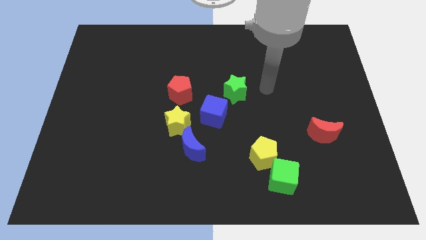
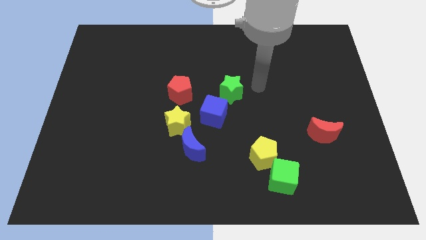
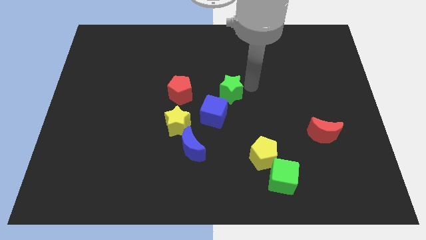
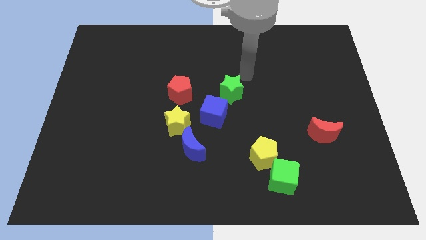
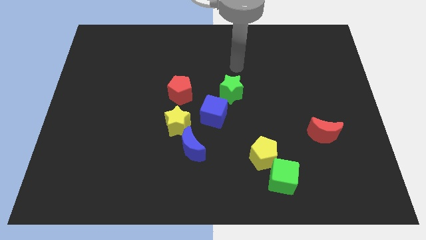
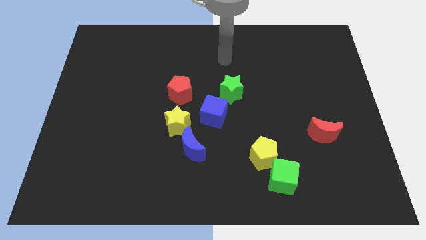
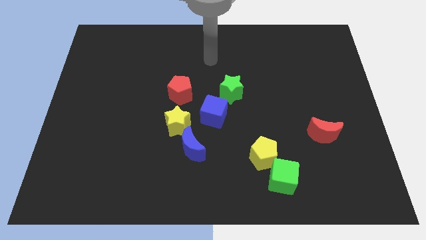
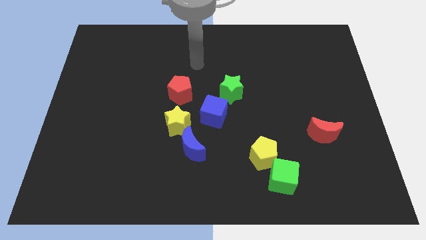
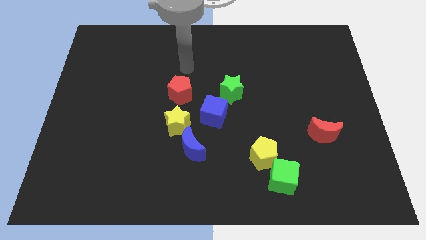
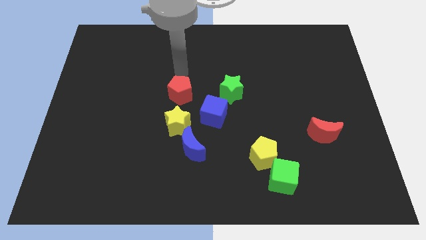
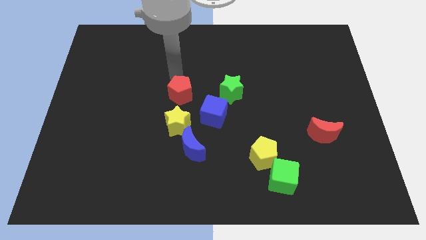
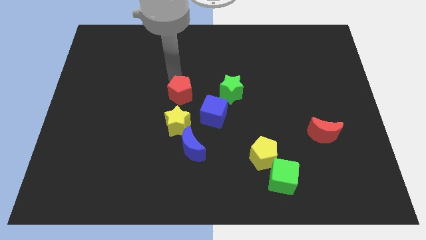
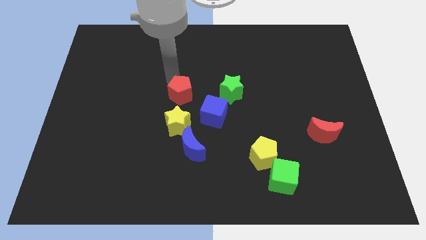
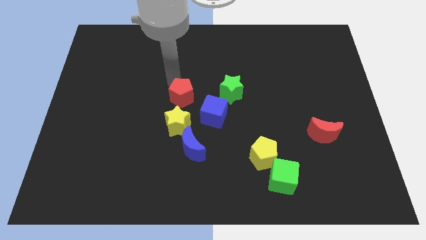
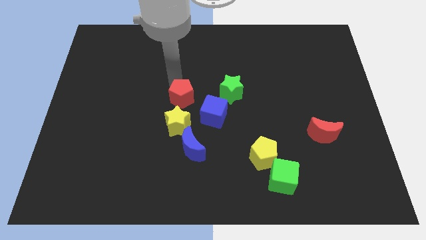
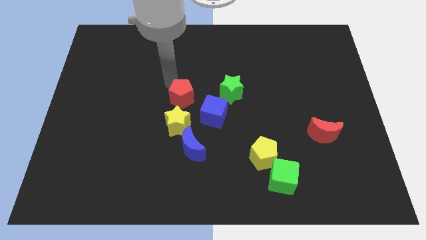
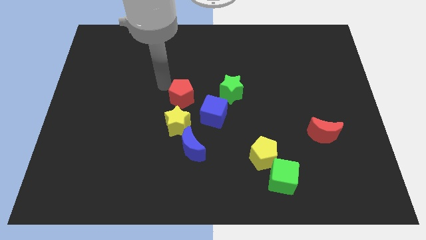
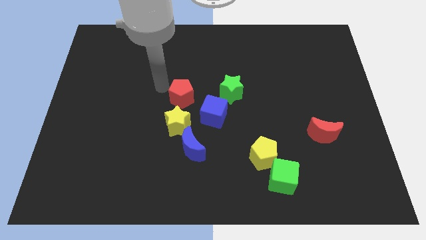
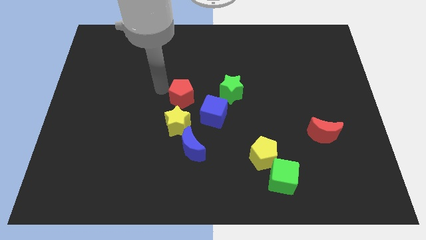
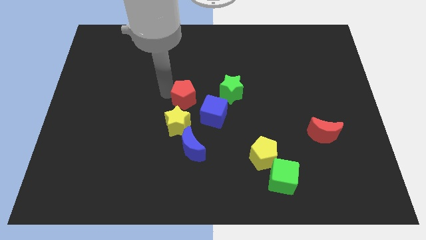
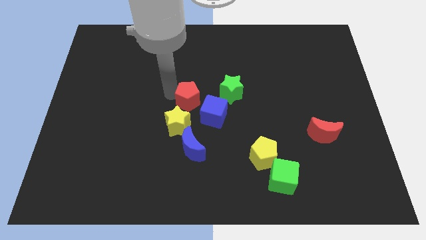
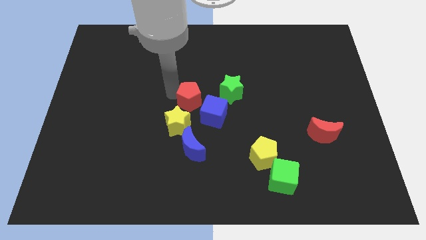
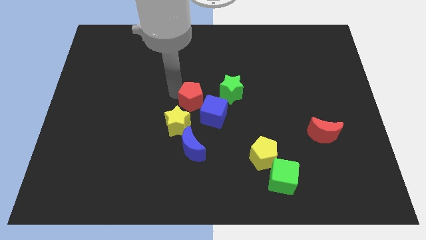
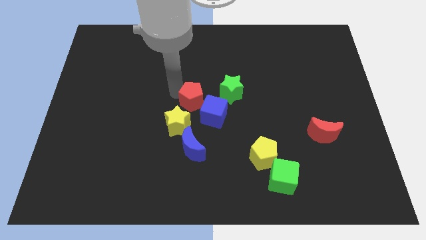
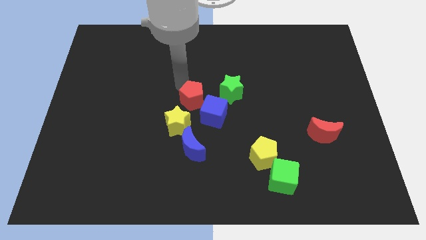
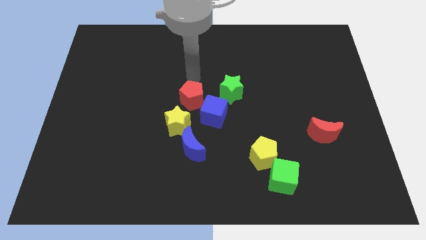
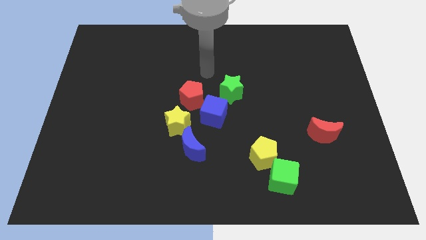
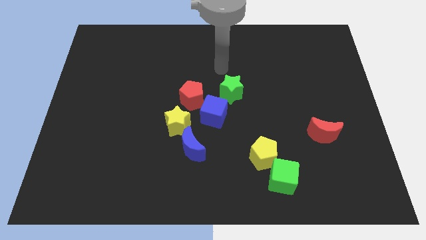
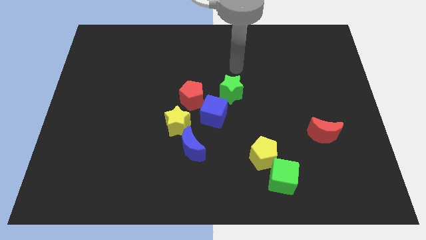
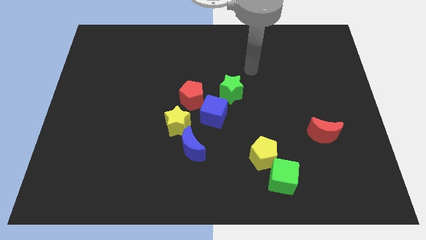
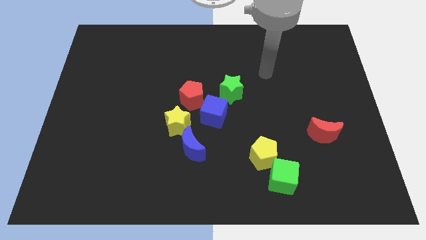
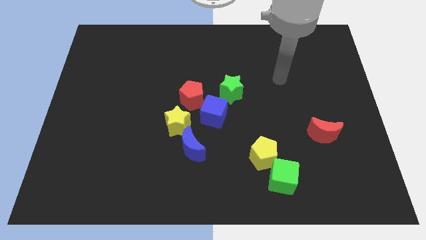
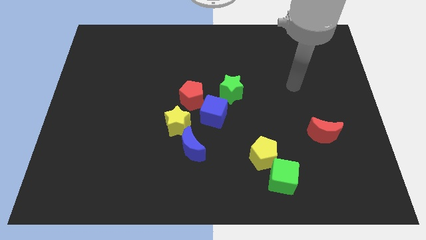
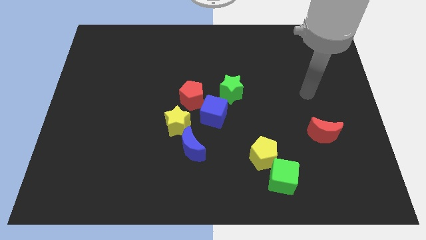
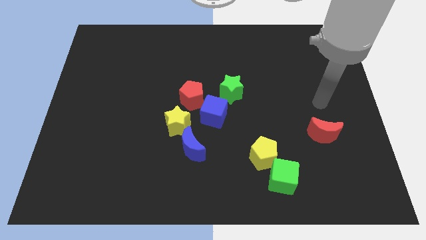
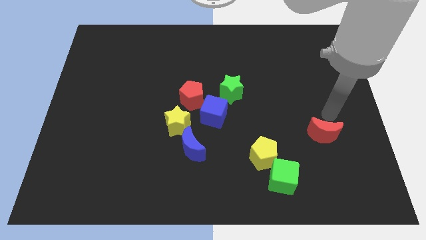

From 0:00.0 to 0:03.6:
move the red pentagon close to the blue cube

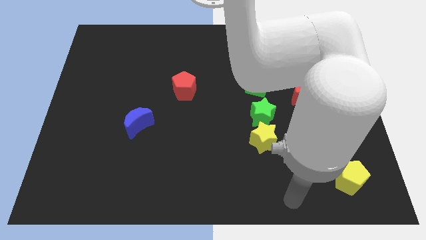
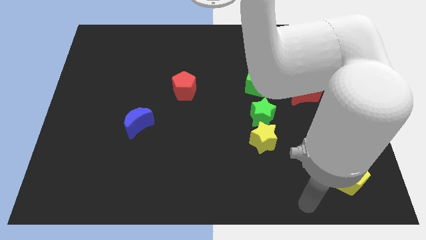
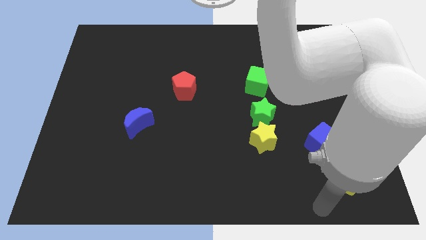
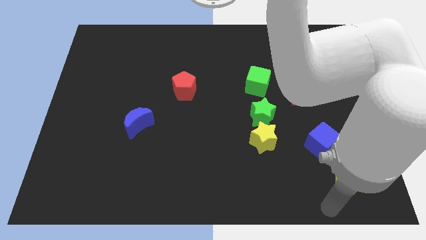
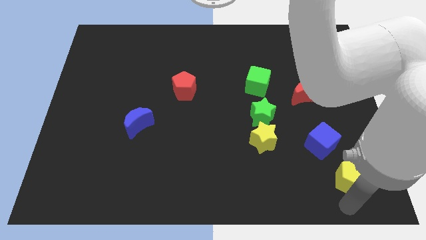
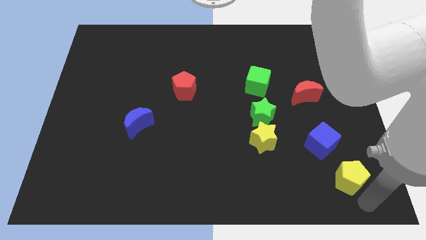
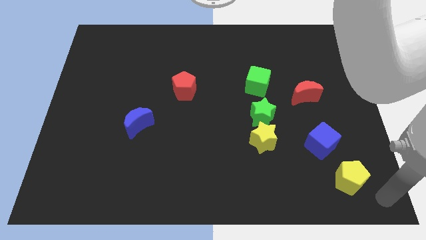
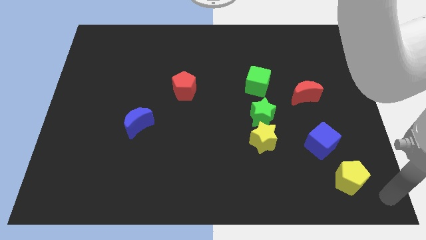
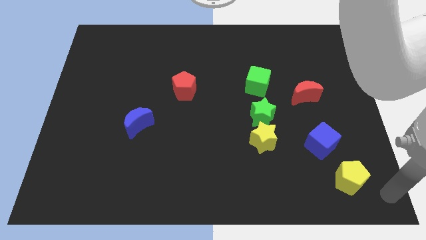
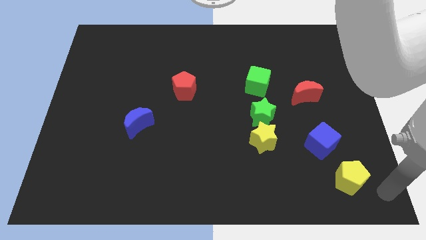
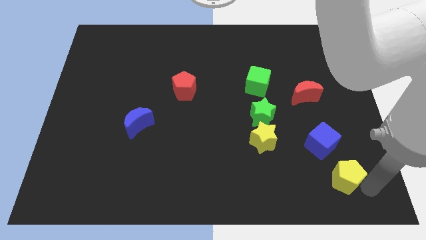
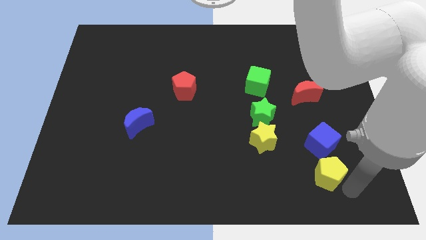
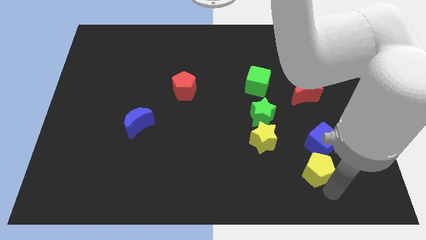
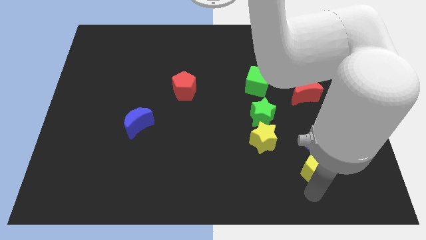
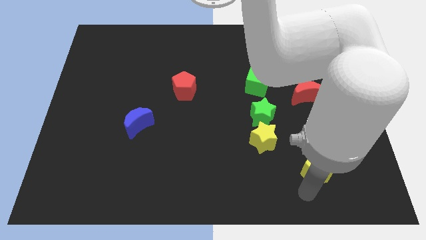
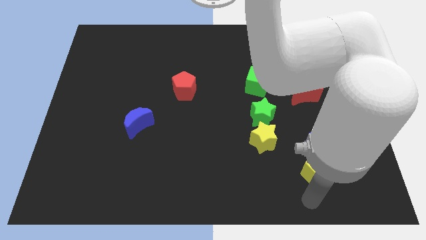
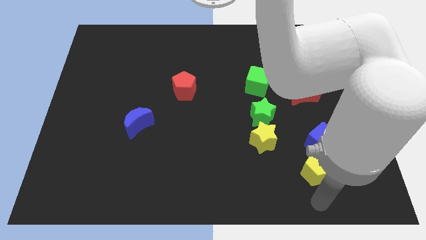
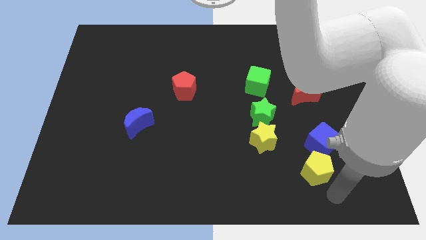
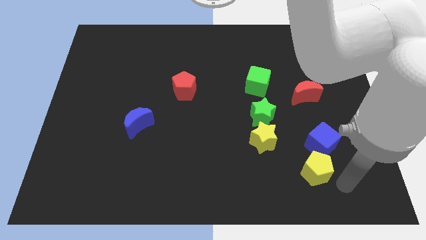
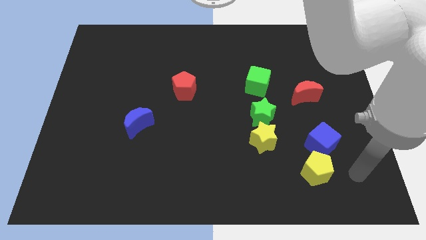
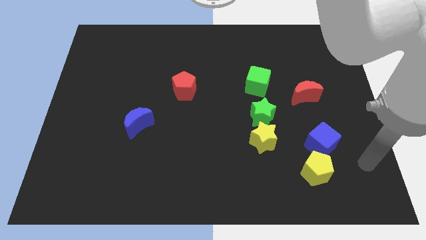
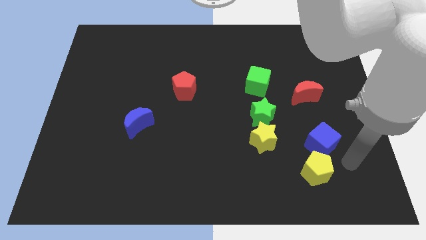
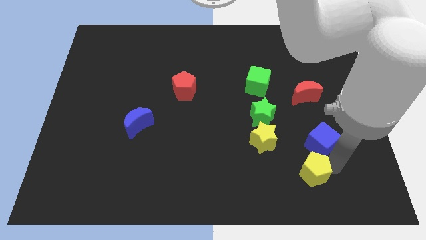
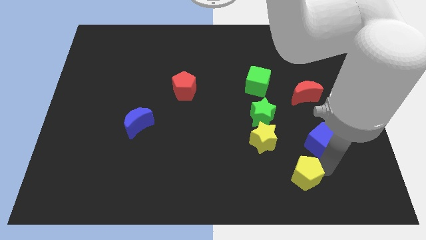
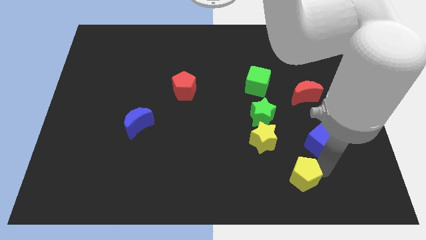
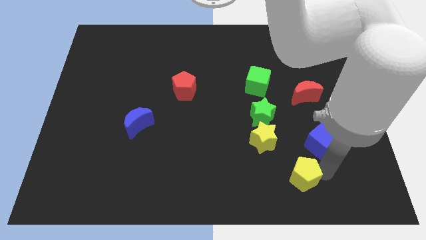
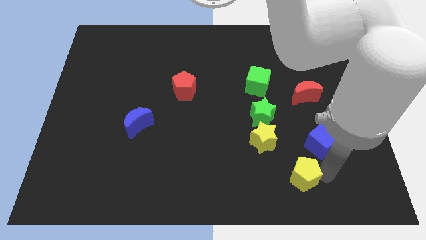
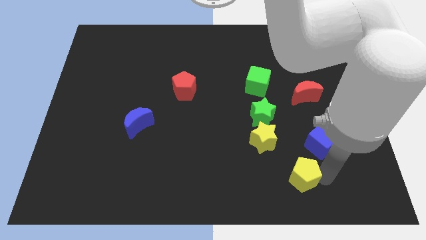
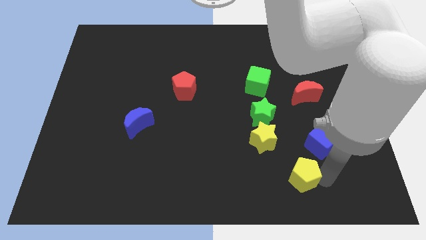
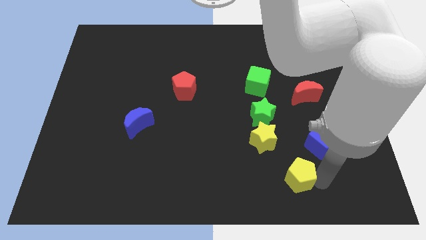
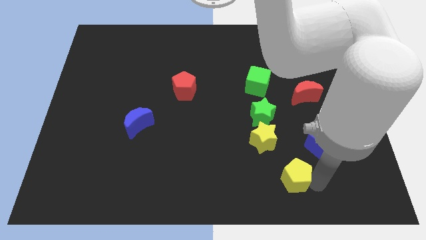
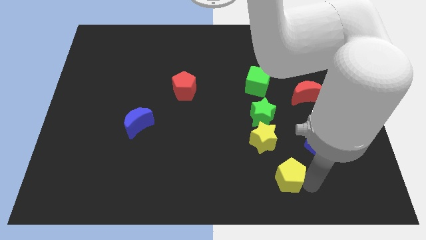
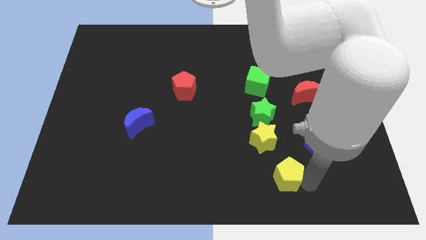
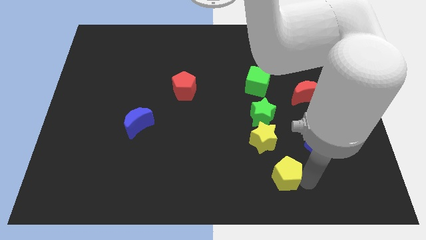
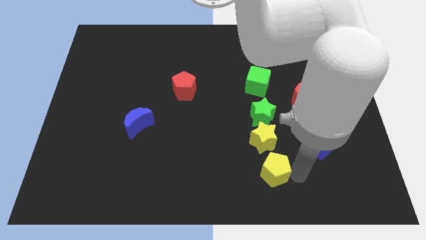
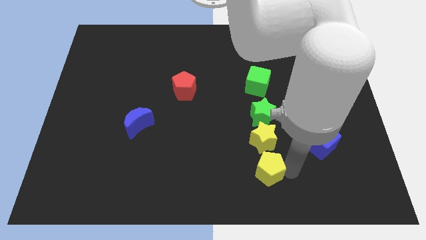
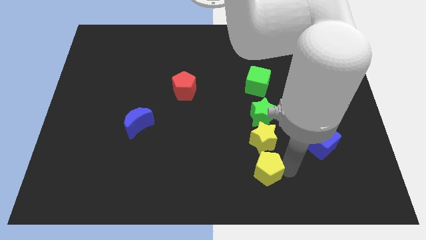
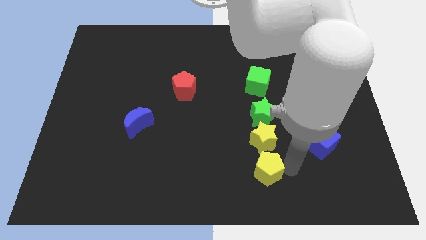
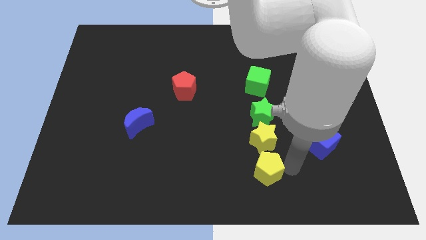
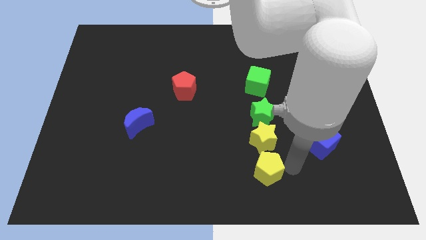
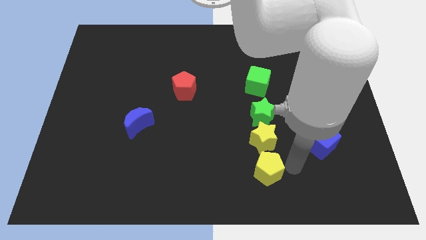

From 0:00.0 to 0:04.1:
push the yellow pentagon at the bottom side of the yellow star

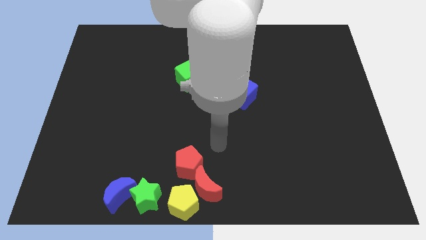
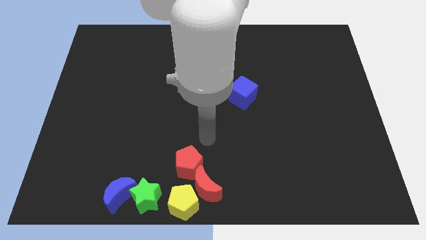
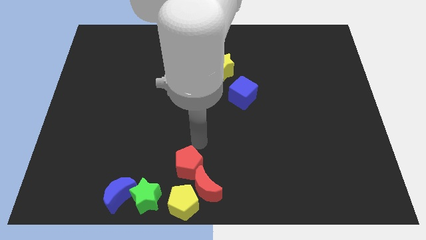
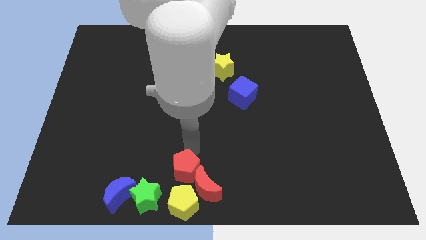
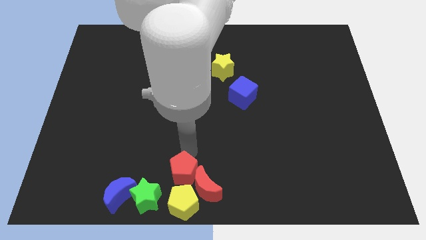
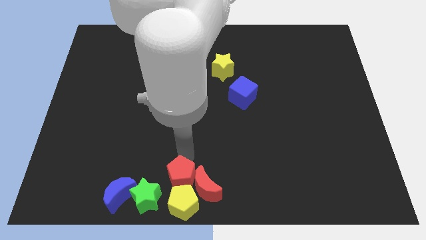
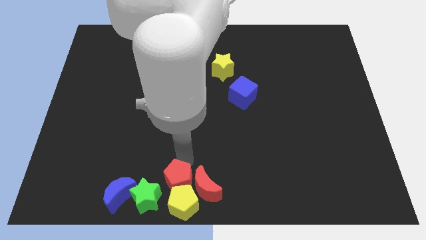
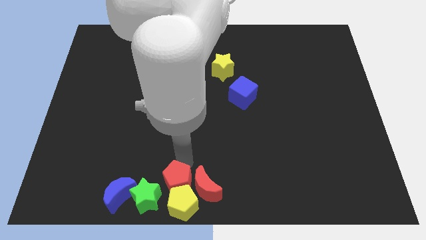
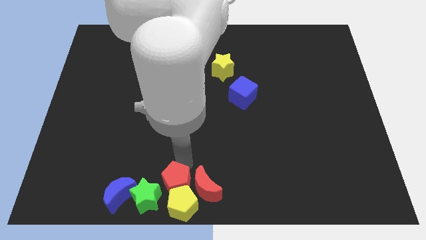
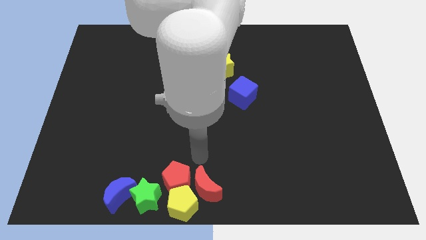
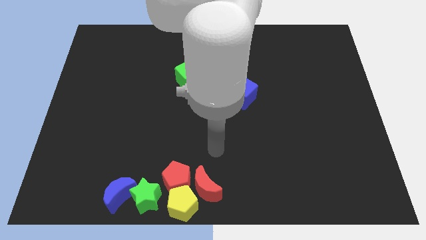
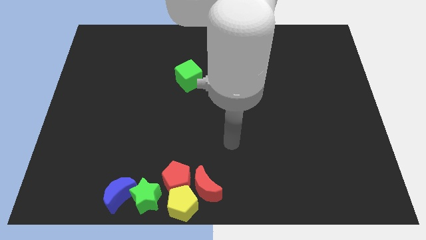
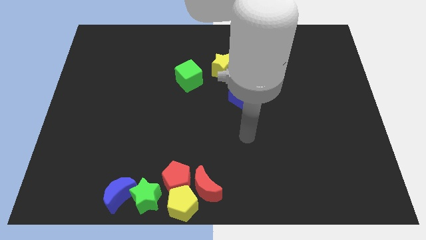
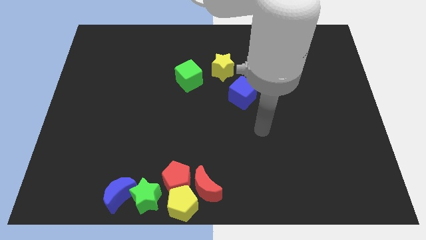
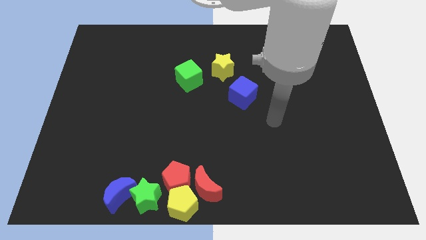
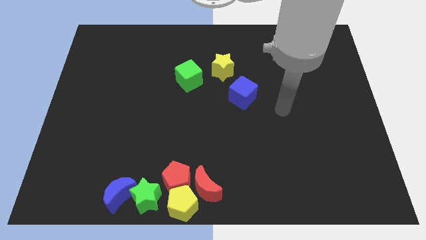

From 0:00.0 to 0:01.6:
attach the red pentagon and the yellow pentagon
